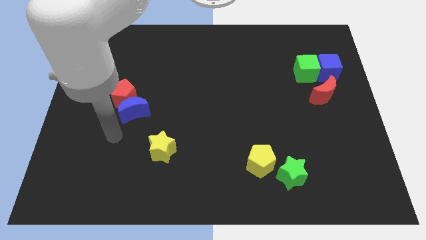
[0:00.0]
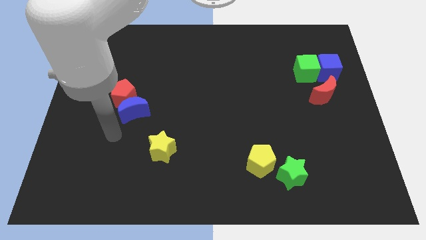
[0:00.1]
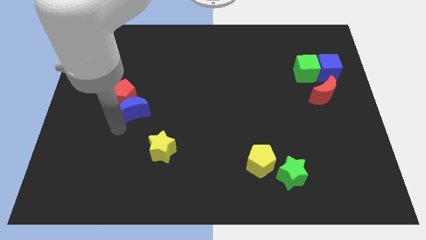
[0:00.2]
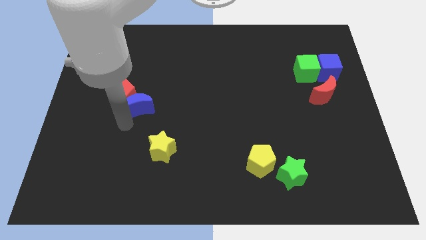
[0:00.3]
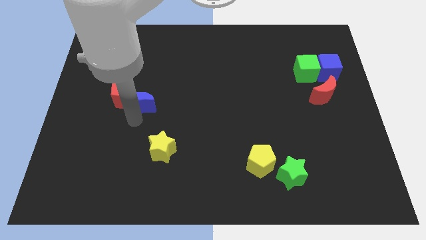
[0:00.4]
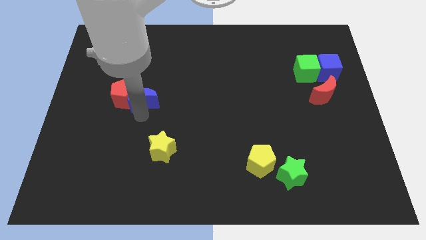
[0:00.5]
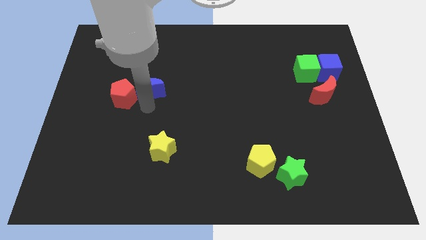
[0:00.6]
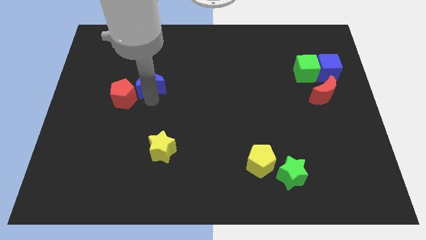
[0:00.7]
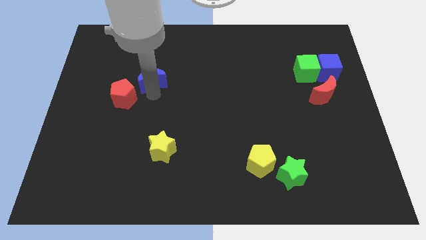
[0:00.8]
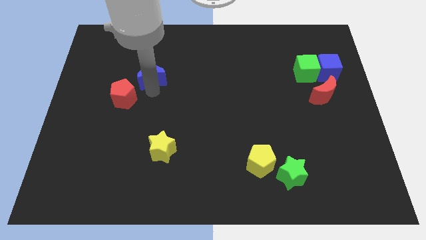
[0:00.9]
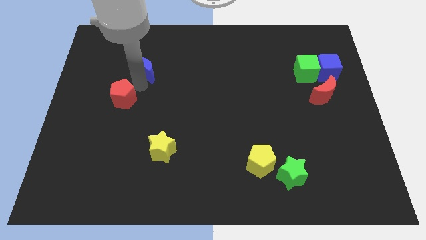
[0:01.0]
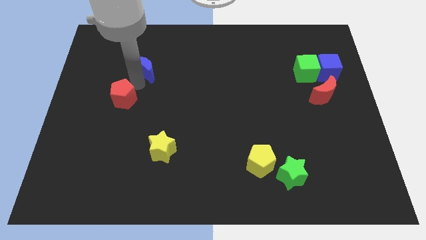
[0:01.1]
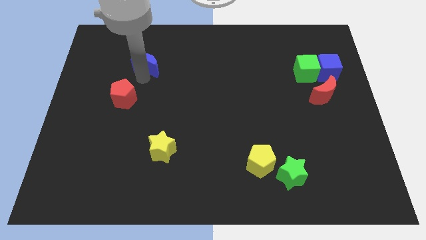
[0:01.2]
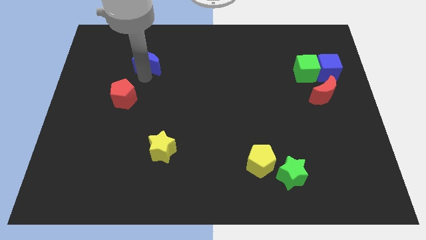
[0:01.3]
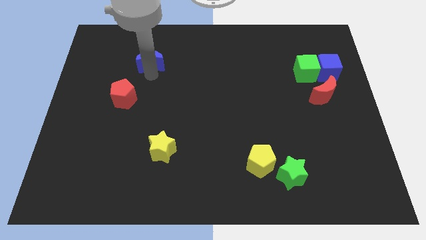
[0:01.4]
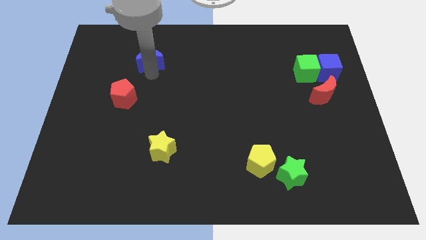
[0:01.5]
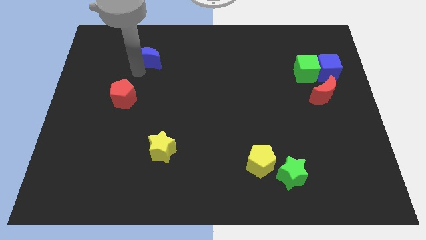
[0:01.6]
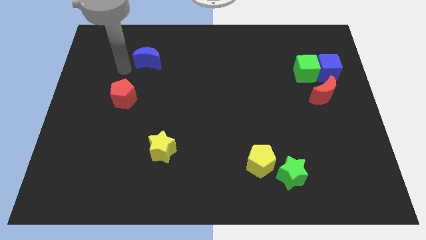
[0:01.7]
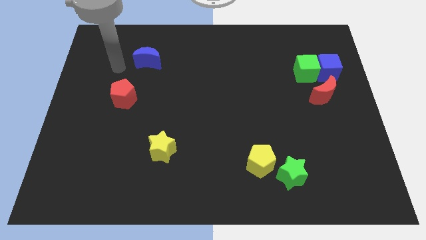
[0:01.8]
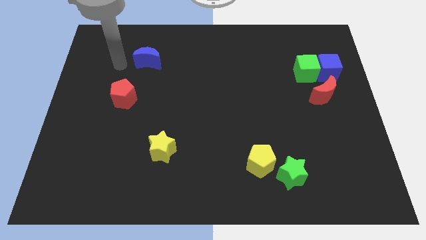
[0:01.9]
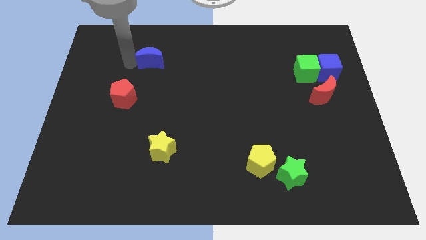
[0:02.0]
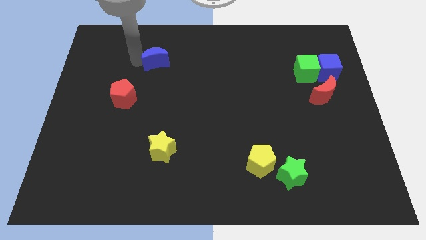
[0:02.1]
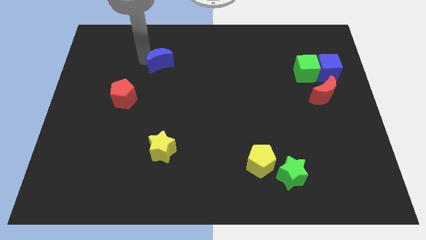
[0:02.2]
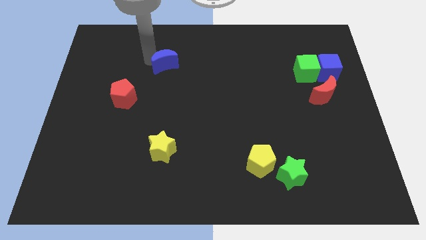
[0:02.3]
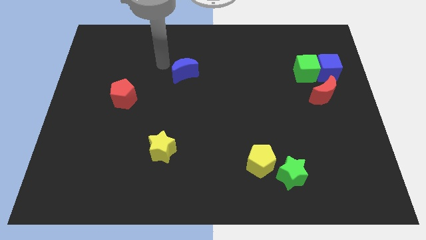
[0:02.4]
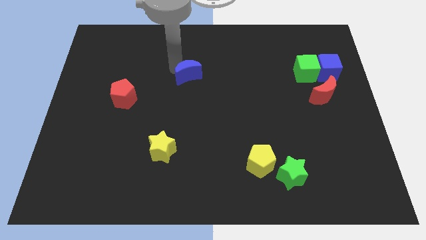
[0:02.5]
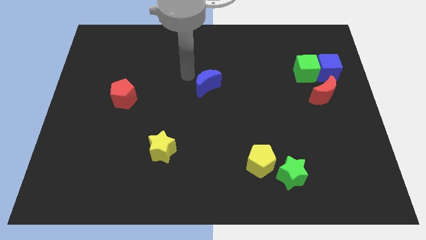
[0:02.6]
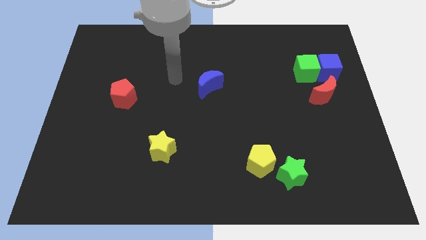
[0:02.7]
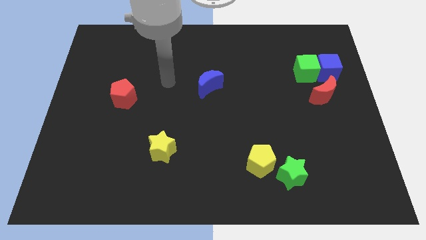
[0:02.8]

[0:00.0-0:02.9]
push the blue crescent towards the center of the board

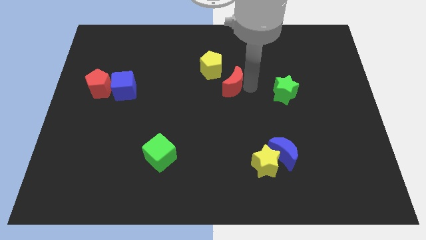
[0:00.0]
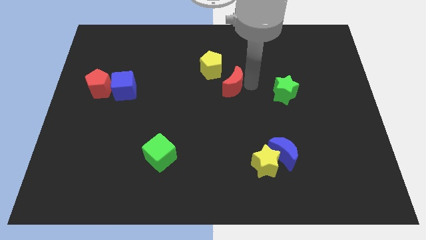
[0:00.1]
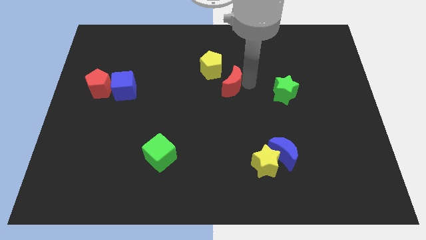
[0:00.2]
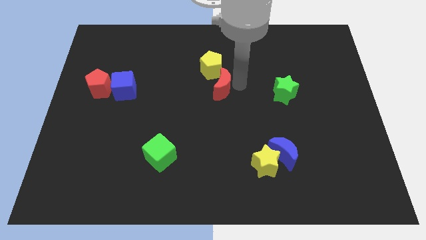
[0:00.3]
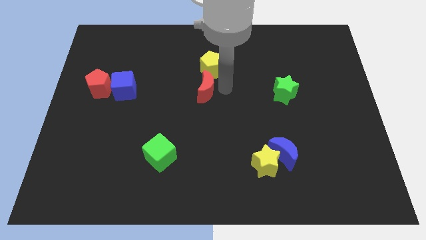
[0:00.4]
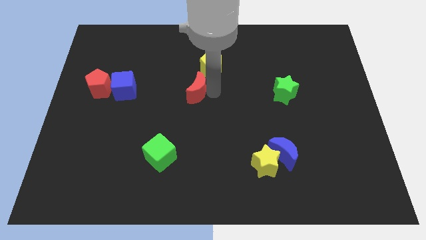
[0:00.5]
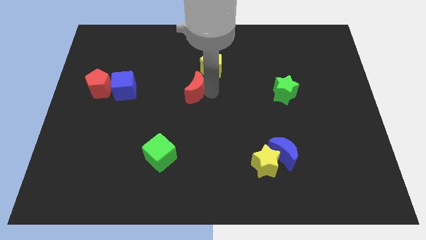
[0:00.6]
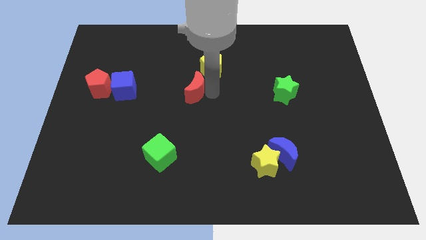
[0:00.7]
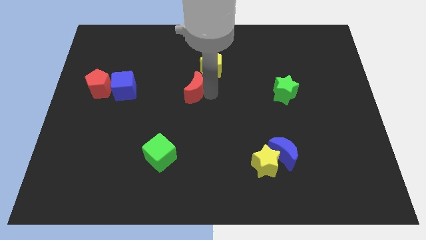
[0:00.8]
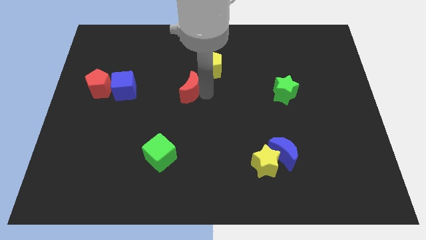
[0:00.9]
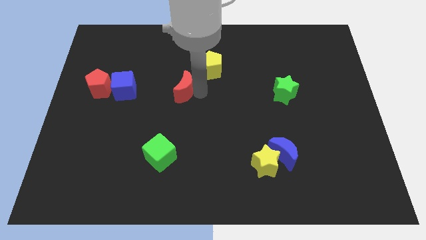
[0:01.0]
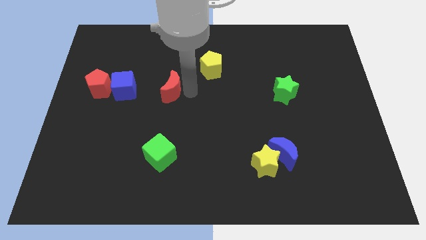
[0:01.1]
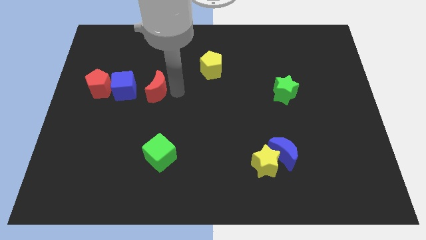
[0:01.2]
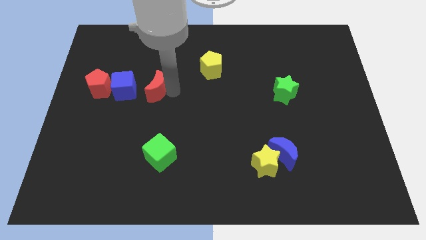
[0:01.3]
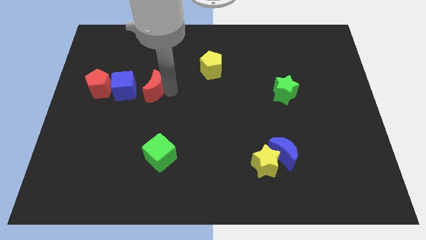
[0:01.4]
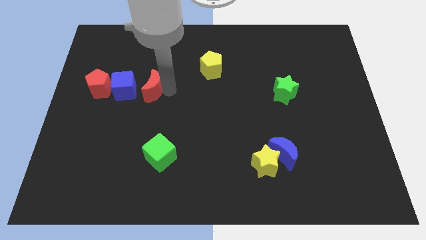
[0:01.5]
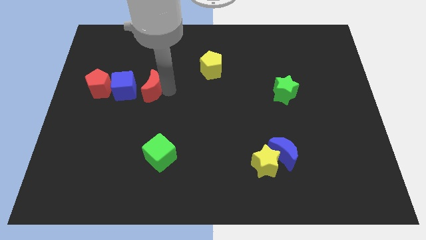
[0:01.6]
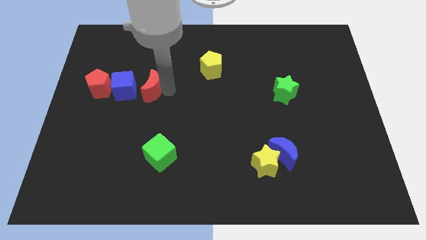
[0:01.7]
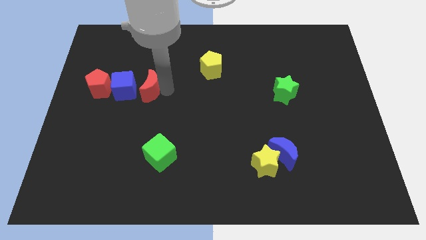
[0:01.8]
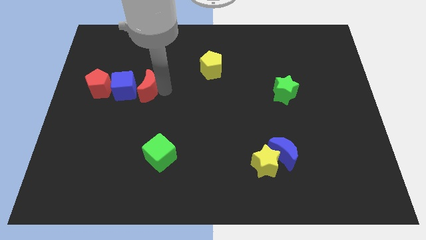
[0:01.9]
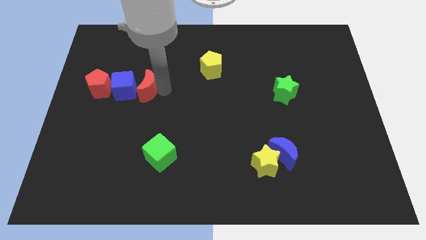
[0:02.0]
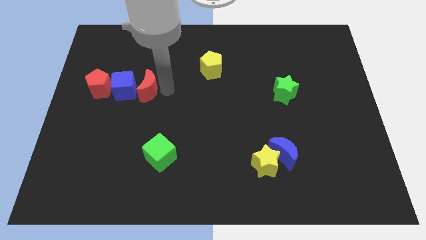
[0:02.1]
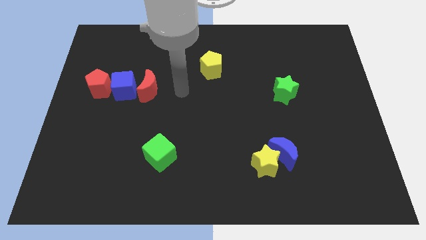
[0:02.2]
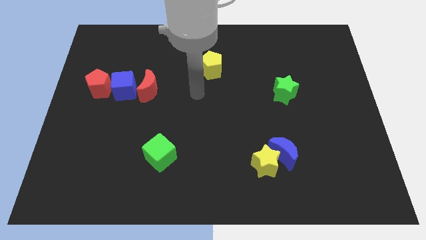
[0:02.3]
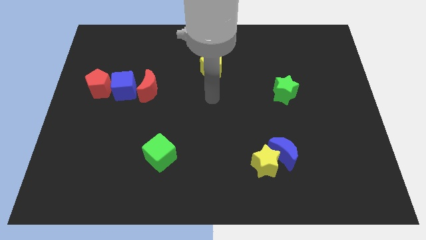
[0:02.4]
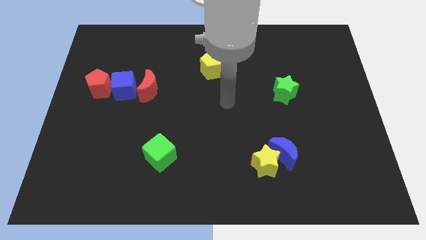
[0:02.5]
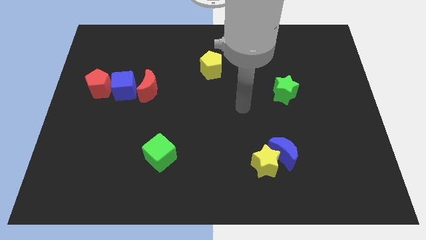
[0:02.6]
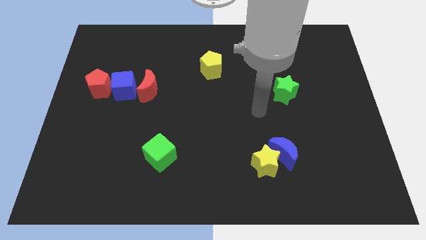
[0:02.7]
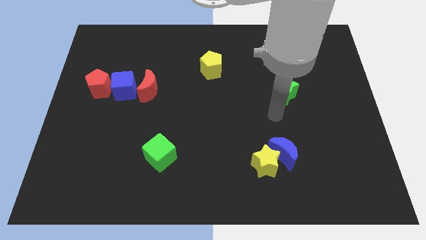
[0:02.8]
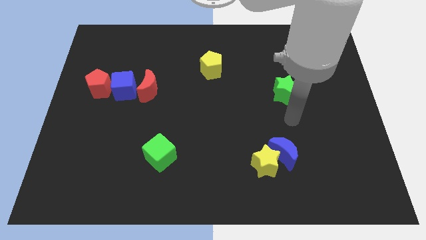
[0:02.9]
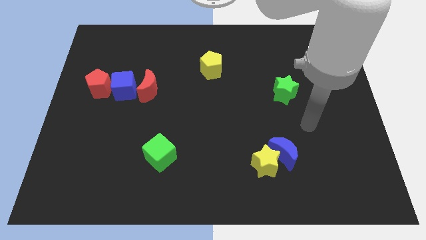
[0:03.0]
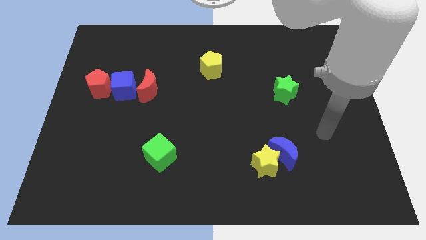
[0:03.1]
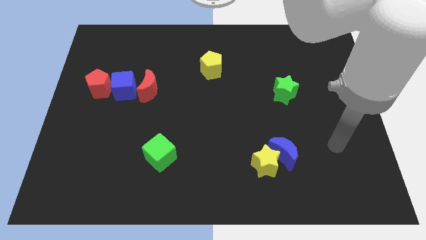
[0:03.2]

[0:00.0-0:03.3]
push the red moon towards blue cube

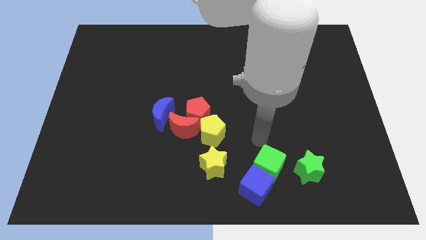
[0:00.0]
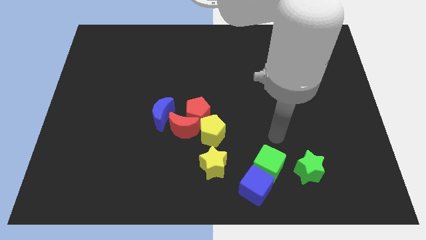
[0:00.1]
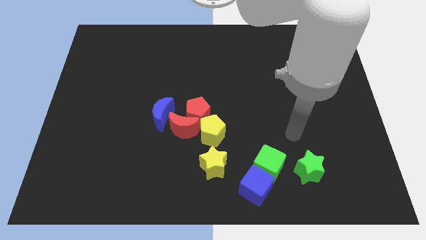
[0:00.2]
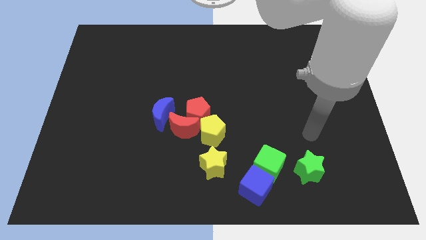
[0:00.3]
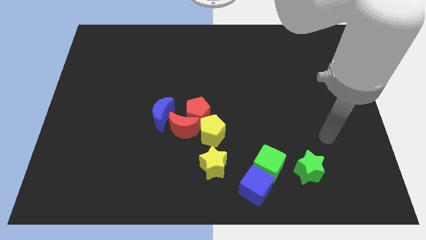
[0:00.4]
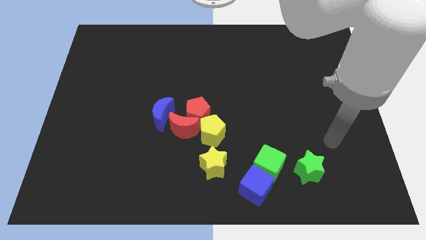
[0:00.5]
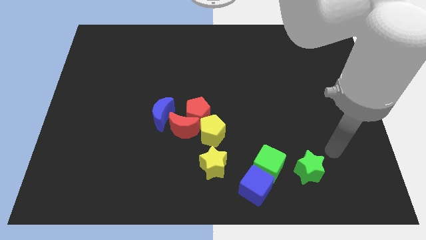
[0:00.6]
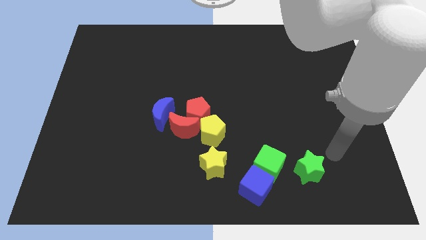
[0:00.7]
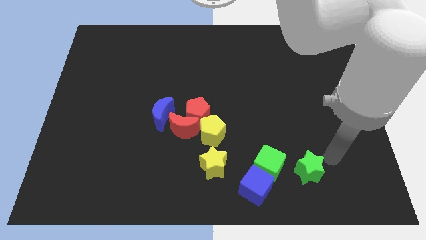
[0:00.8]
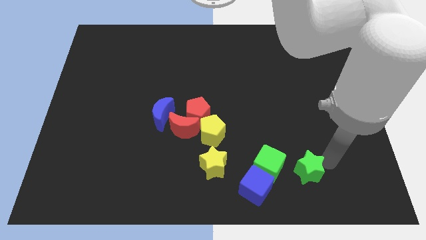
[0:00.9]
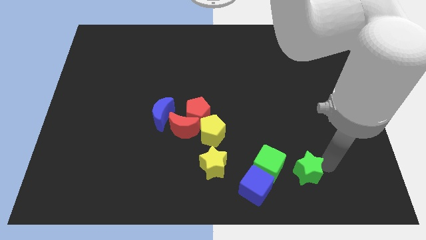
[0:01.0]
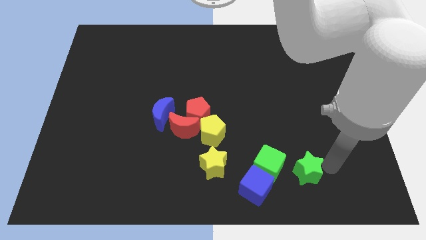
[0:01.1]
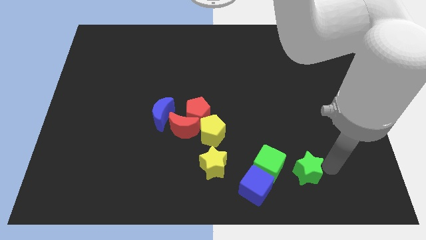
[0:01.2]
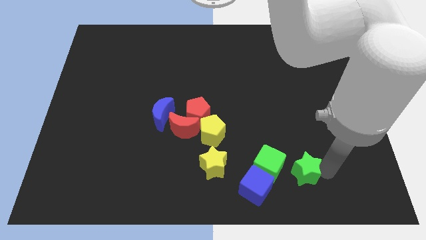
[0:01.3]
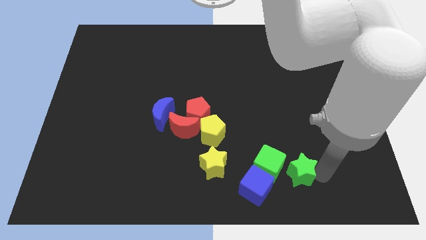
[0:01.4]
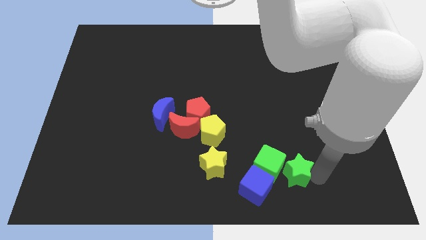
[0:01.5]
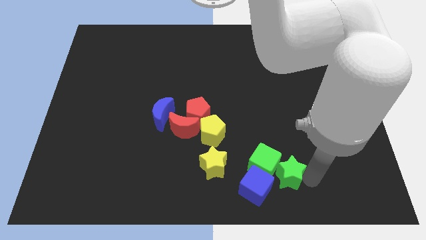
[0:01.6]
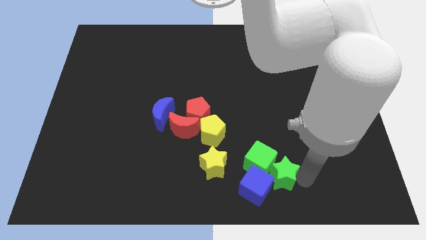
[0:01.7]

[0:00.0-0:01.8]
move the green star into the right side of the green cube

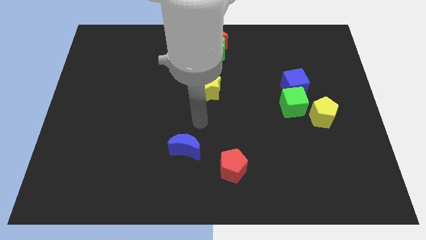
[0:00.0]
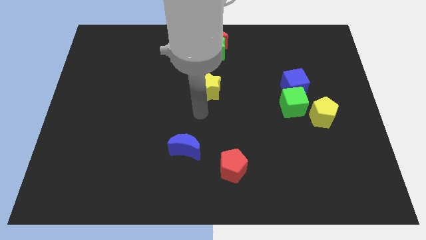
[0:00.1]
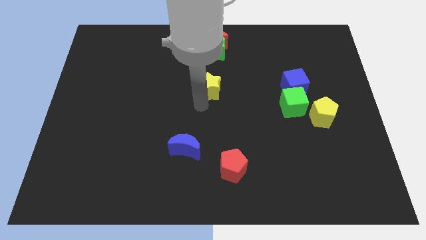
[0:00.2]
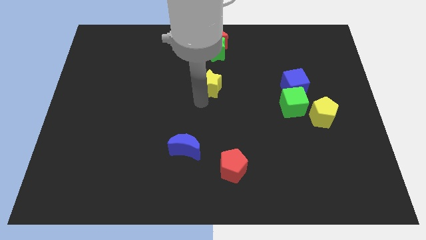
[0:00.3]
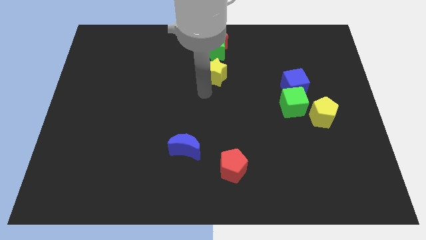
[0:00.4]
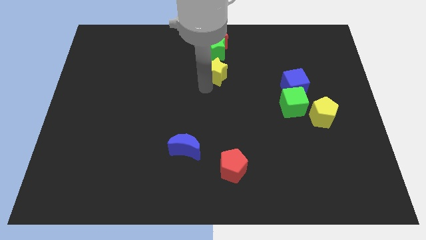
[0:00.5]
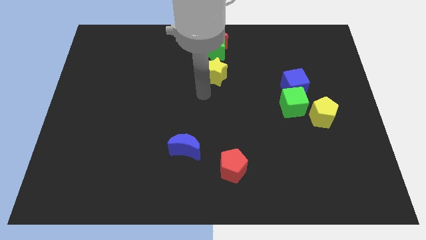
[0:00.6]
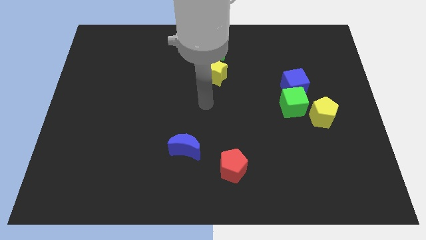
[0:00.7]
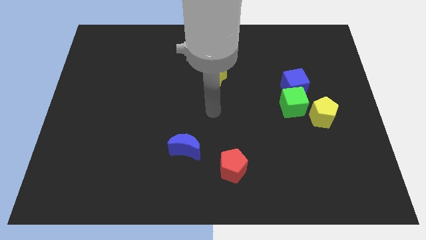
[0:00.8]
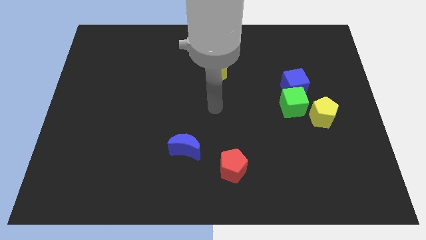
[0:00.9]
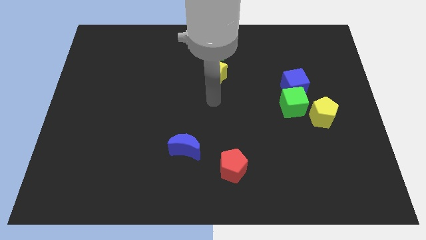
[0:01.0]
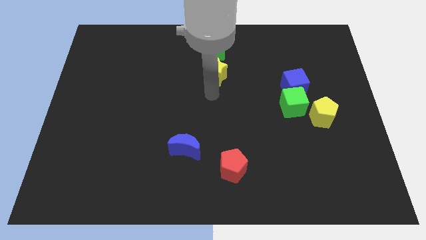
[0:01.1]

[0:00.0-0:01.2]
push yellow star towards green star
